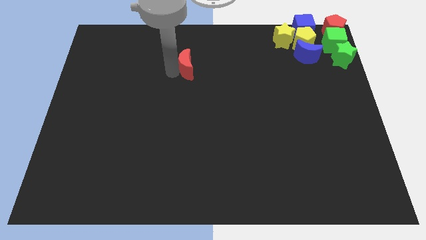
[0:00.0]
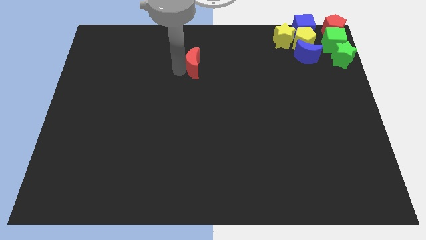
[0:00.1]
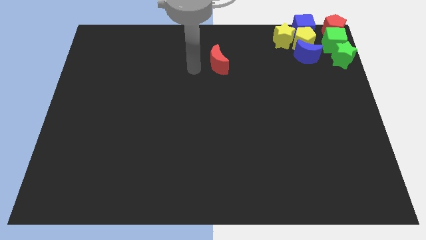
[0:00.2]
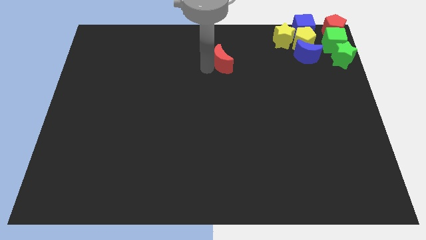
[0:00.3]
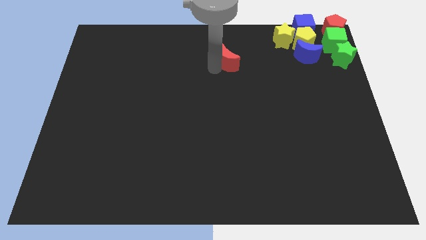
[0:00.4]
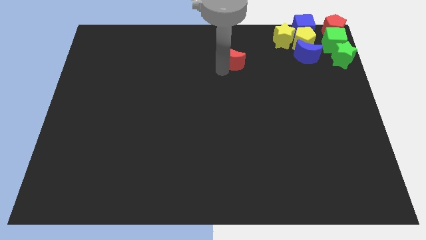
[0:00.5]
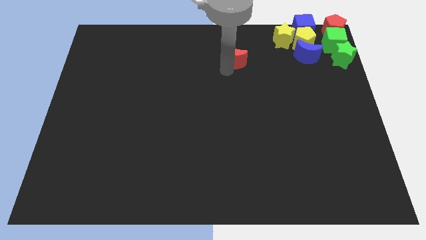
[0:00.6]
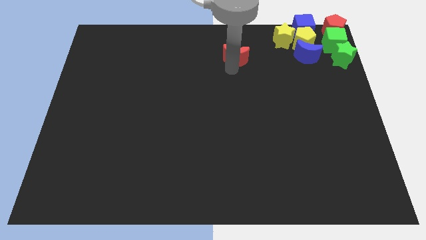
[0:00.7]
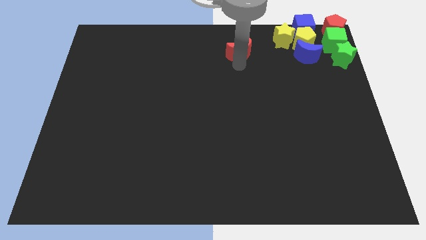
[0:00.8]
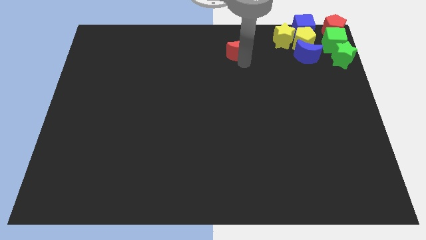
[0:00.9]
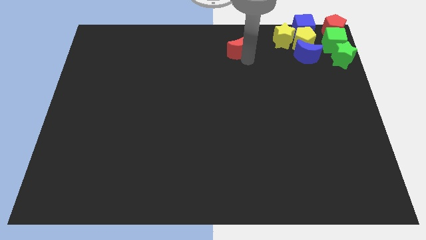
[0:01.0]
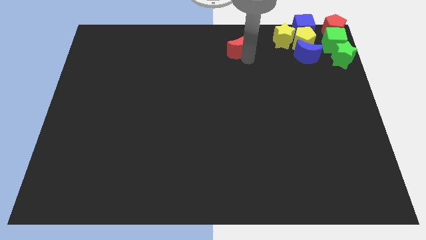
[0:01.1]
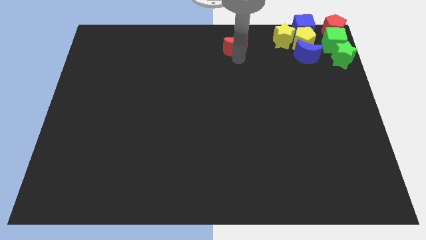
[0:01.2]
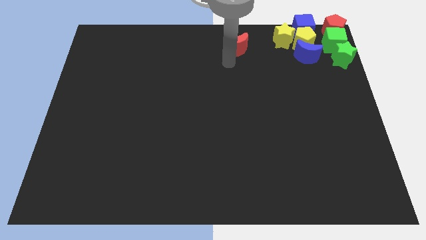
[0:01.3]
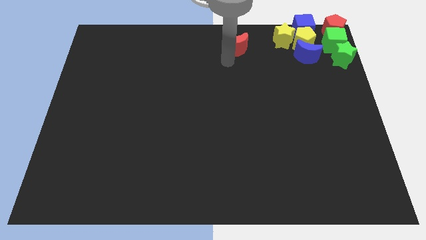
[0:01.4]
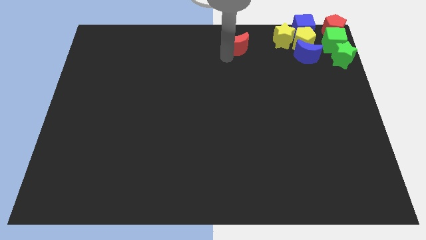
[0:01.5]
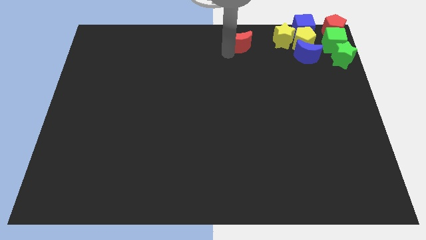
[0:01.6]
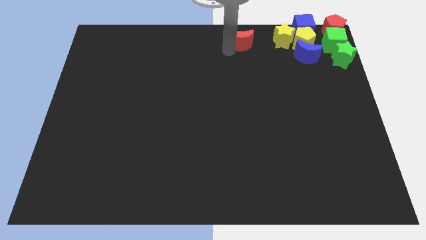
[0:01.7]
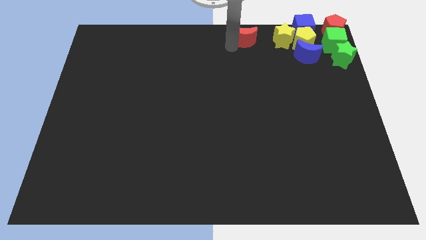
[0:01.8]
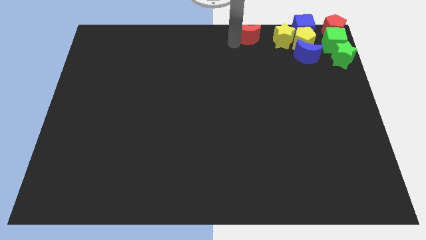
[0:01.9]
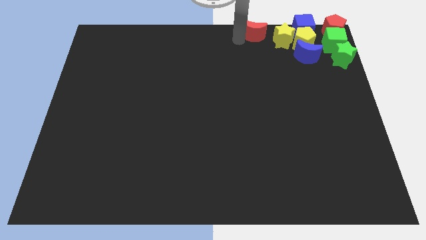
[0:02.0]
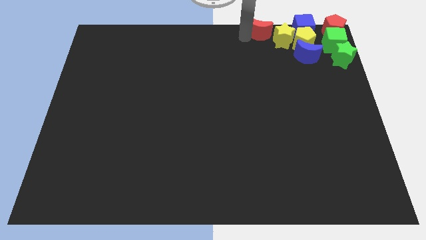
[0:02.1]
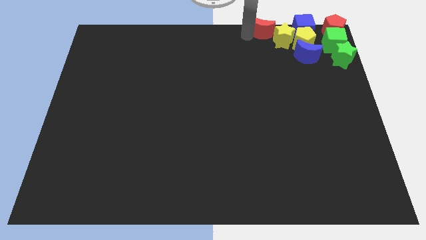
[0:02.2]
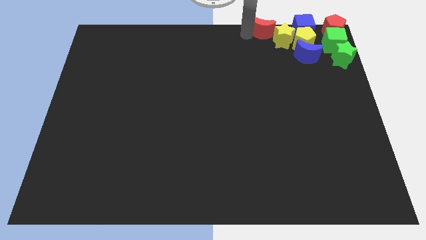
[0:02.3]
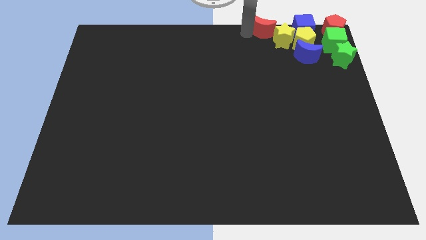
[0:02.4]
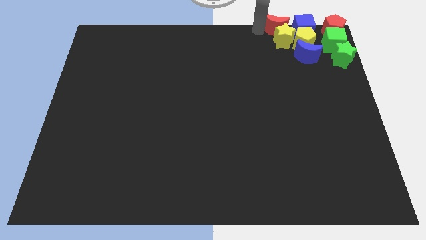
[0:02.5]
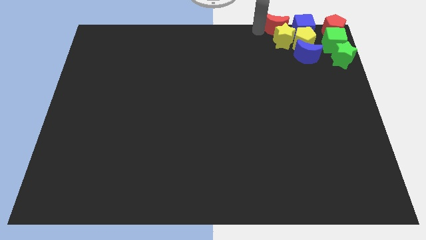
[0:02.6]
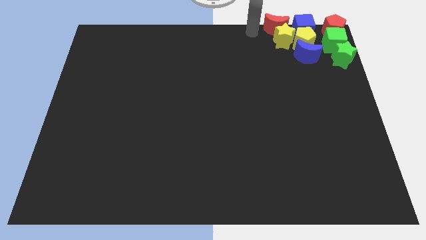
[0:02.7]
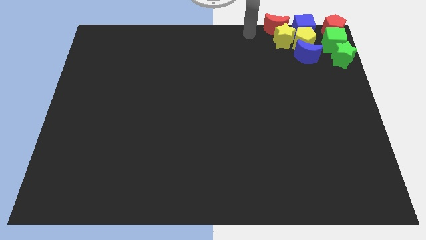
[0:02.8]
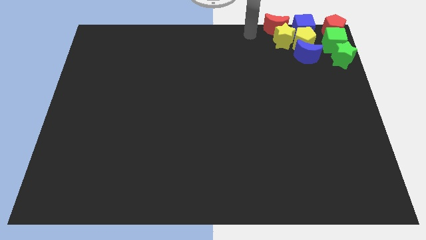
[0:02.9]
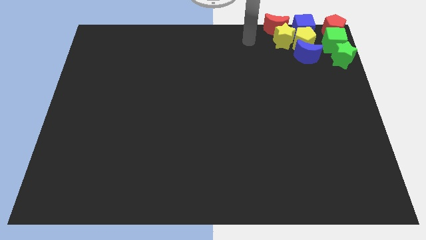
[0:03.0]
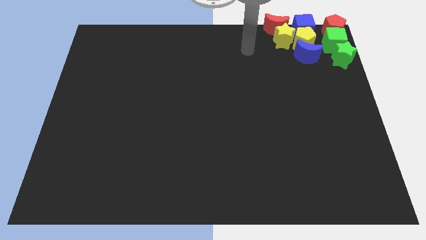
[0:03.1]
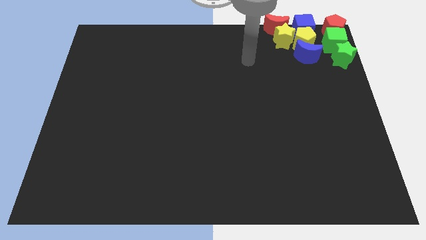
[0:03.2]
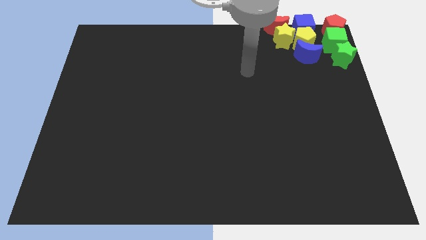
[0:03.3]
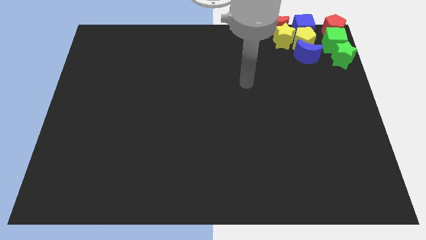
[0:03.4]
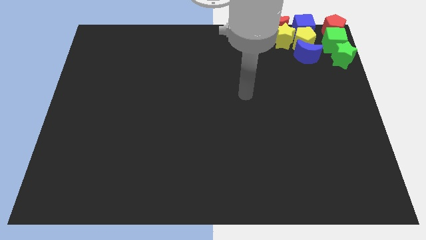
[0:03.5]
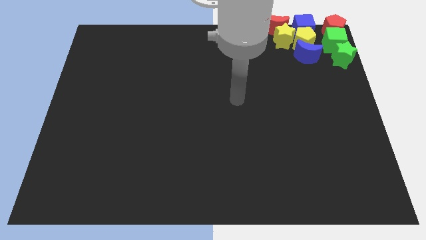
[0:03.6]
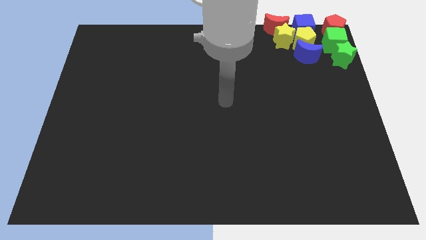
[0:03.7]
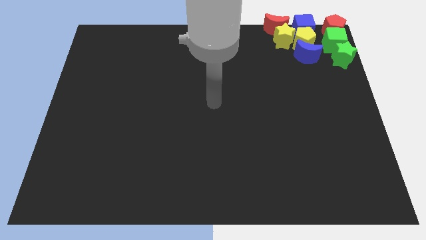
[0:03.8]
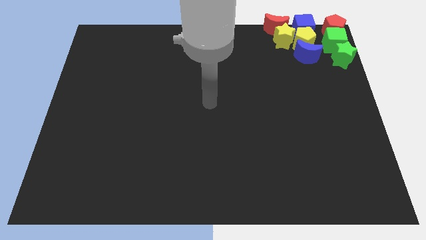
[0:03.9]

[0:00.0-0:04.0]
move the red crescent to the left of the blue cube to the top right of the board

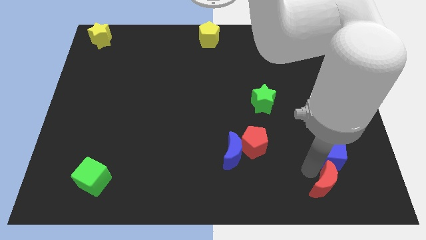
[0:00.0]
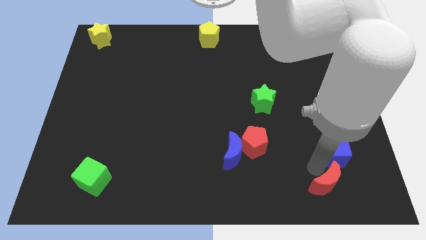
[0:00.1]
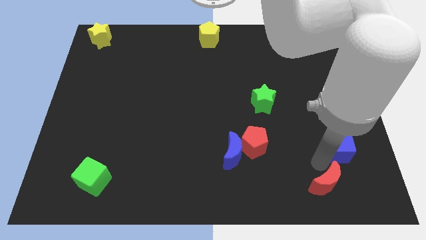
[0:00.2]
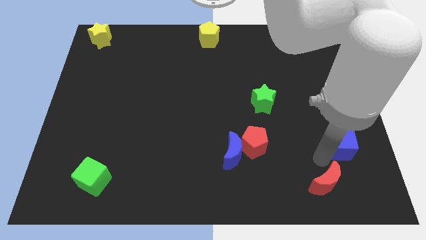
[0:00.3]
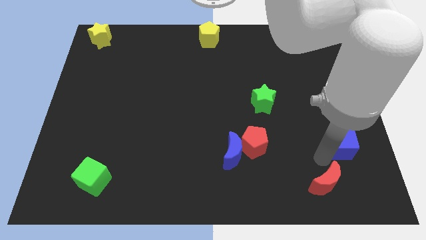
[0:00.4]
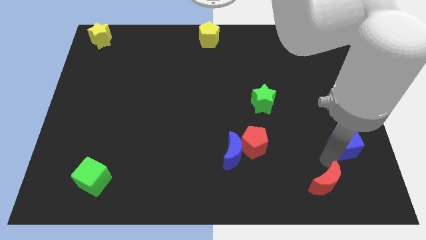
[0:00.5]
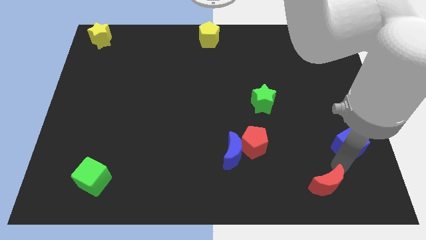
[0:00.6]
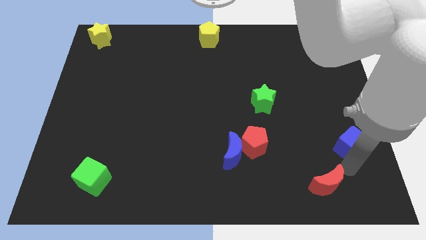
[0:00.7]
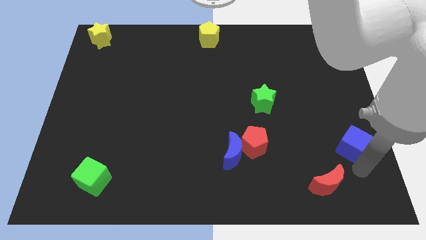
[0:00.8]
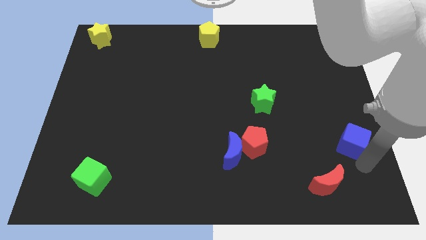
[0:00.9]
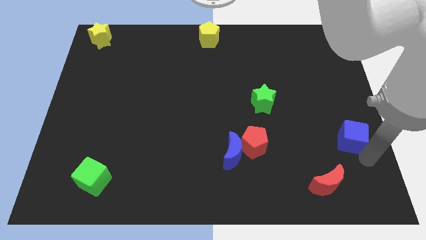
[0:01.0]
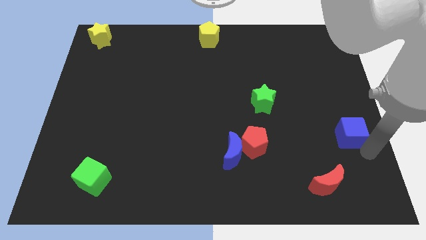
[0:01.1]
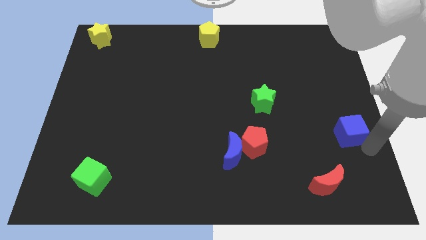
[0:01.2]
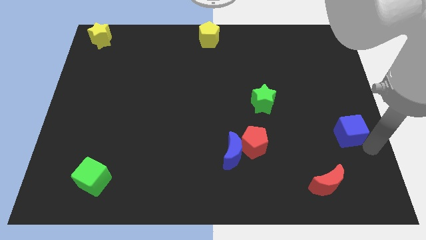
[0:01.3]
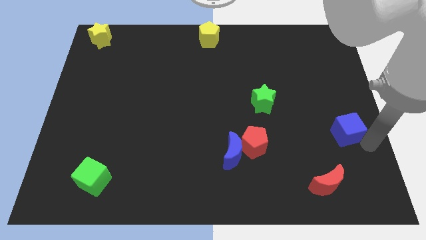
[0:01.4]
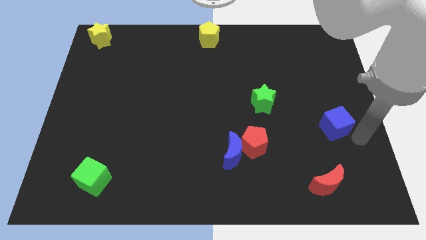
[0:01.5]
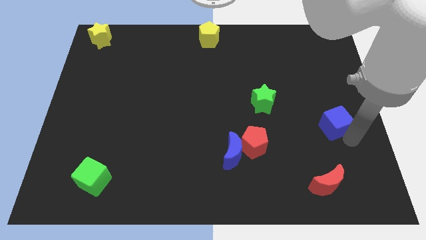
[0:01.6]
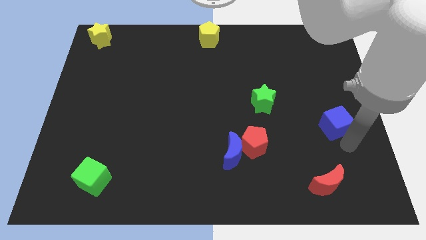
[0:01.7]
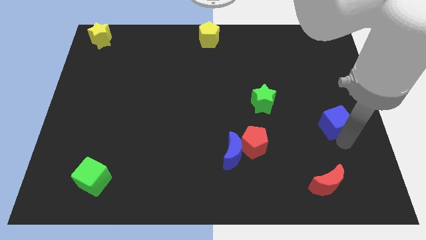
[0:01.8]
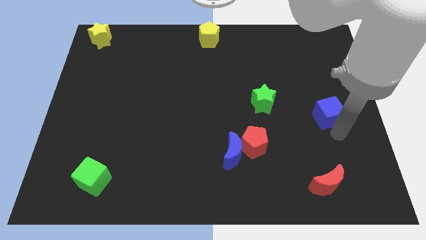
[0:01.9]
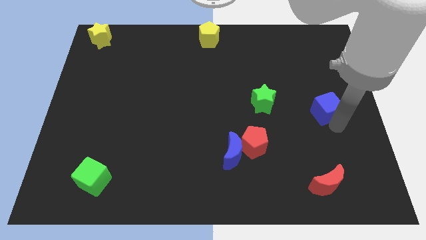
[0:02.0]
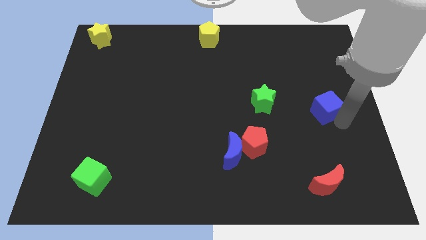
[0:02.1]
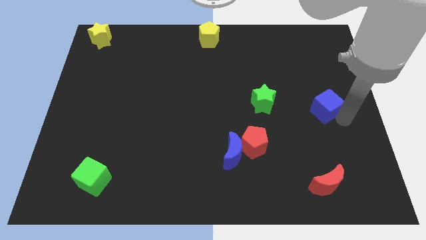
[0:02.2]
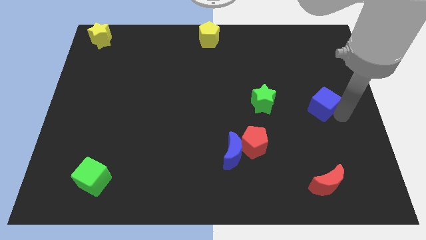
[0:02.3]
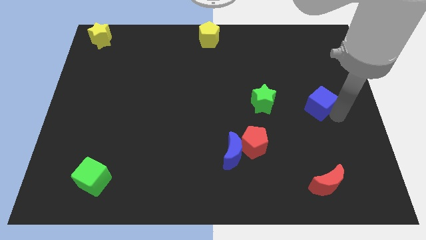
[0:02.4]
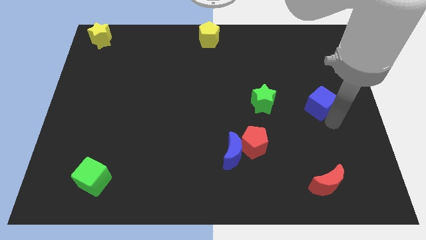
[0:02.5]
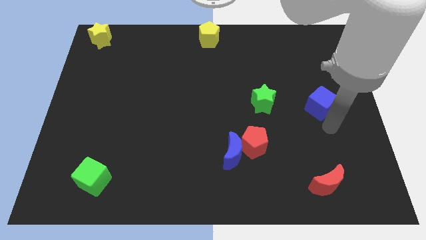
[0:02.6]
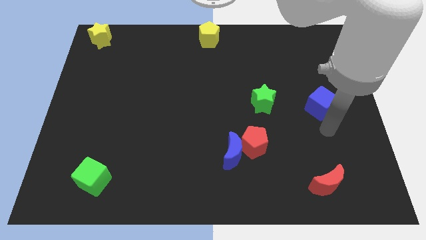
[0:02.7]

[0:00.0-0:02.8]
move the blue cube to the top of the red crescent

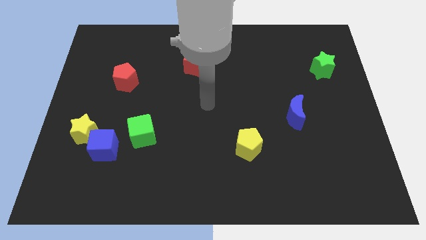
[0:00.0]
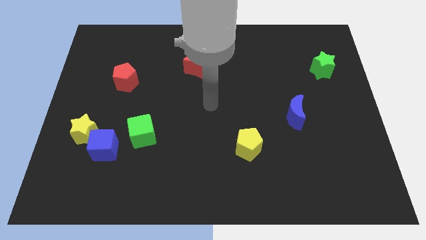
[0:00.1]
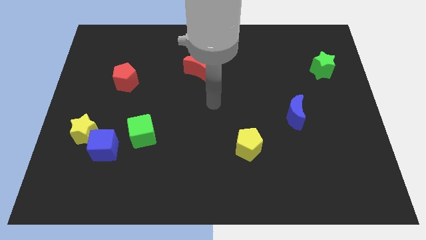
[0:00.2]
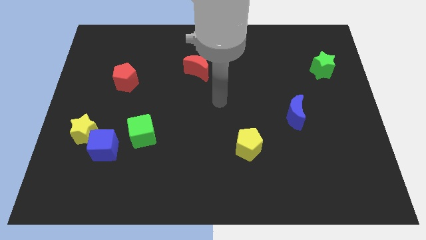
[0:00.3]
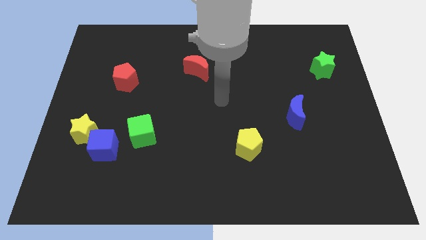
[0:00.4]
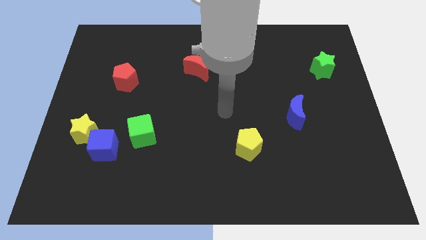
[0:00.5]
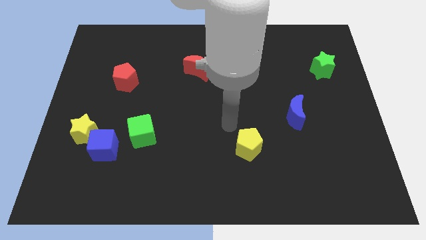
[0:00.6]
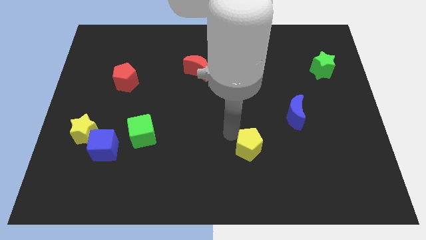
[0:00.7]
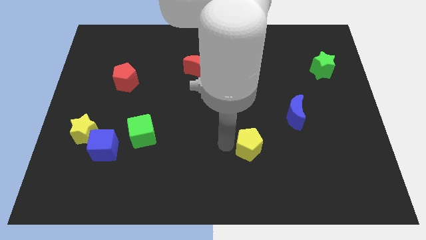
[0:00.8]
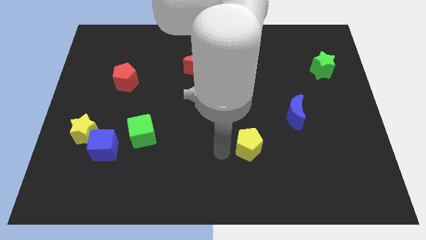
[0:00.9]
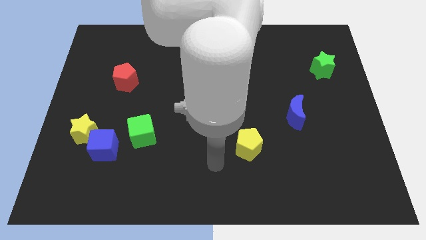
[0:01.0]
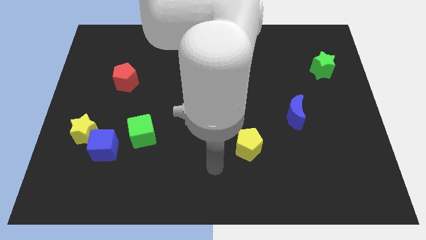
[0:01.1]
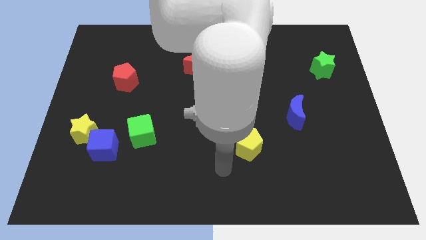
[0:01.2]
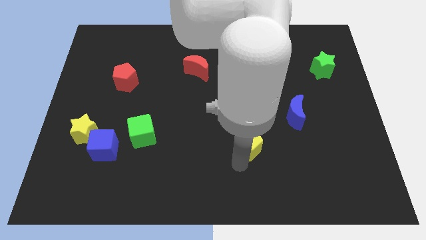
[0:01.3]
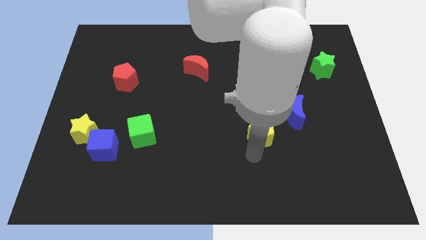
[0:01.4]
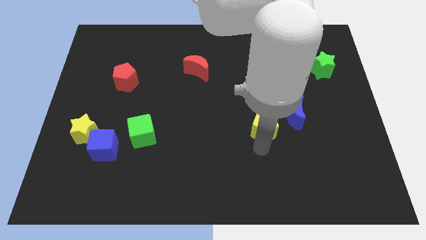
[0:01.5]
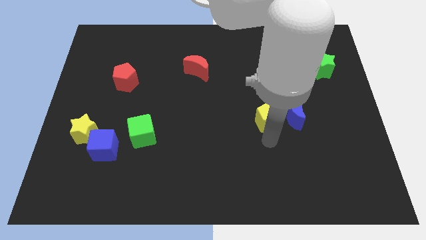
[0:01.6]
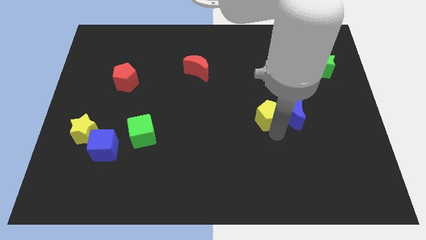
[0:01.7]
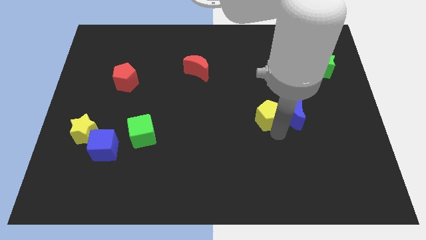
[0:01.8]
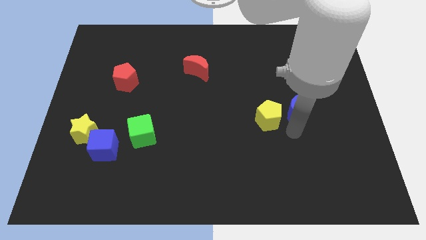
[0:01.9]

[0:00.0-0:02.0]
place the yellow pentagon left to the blue moon
